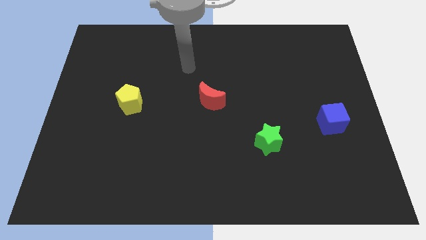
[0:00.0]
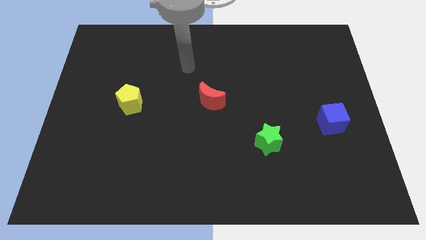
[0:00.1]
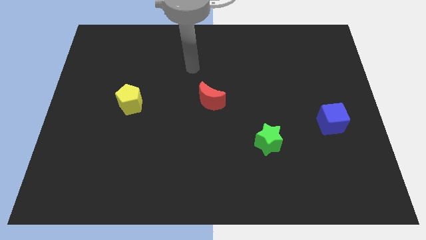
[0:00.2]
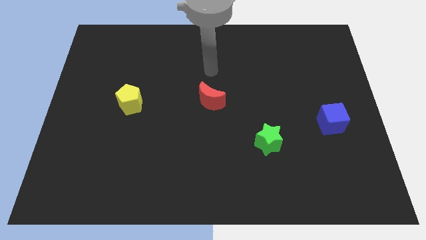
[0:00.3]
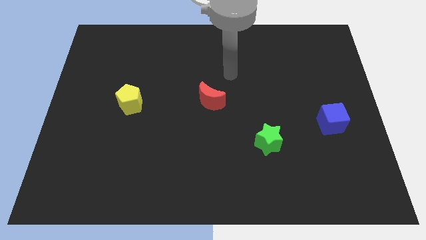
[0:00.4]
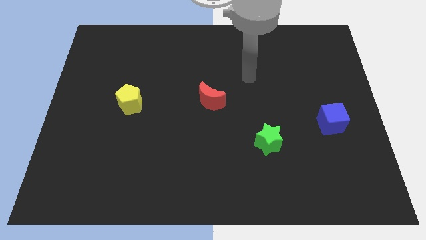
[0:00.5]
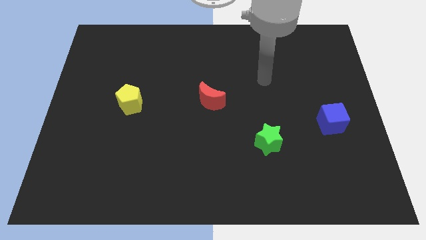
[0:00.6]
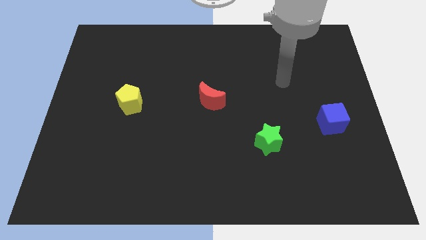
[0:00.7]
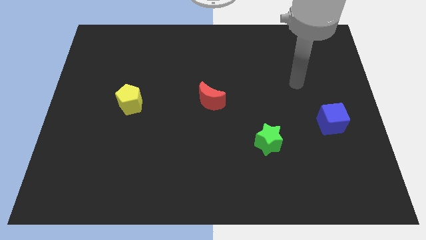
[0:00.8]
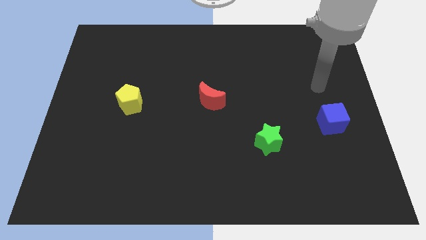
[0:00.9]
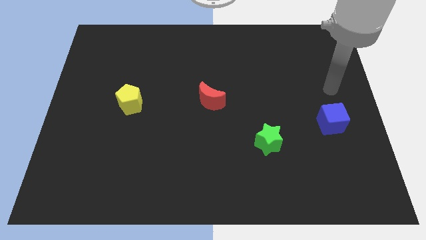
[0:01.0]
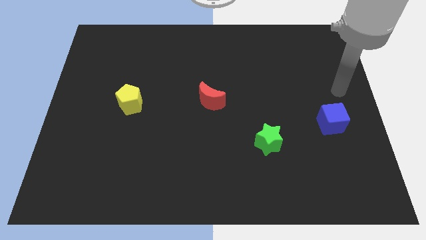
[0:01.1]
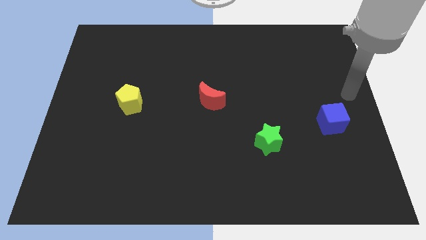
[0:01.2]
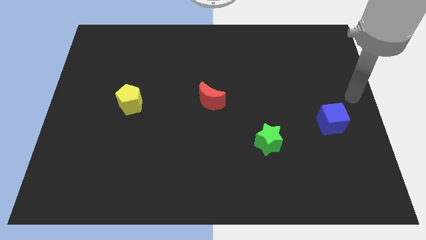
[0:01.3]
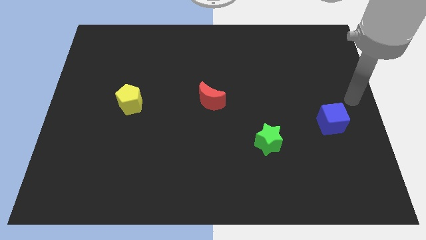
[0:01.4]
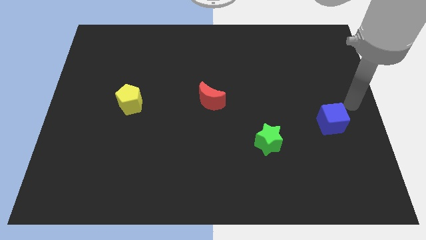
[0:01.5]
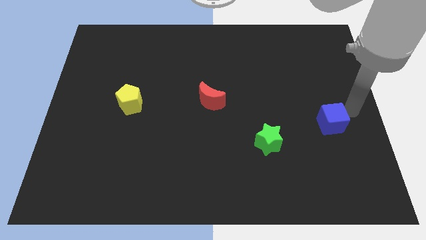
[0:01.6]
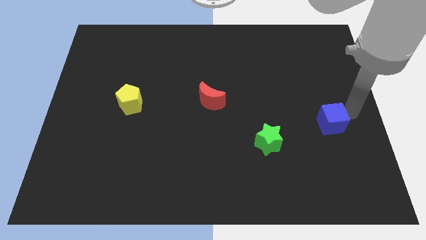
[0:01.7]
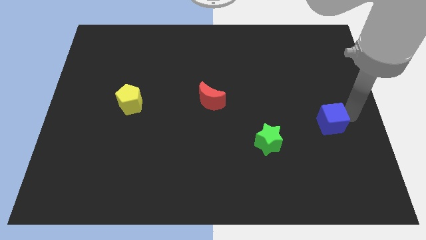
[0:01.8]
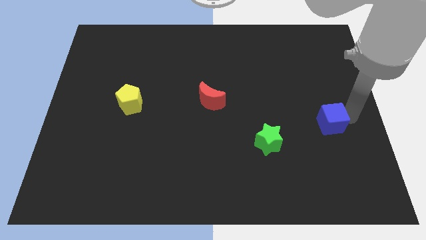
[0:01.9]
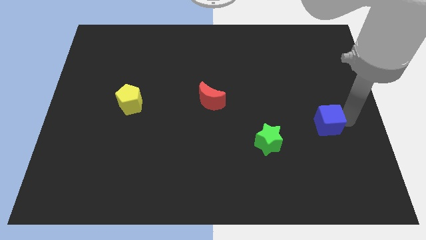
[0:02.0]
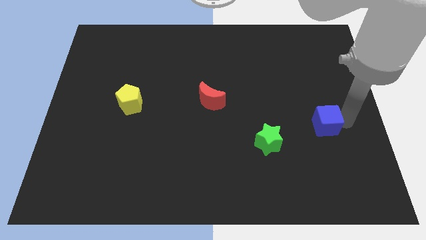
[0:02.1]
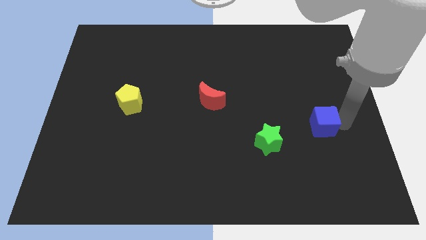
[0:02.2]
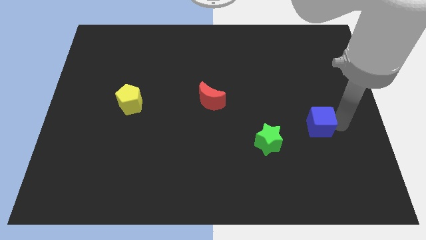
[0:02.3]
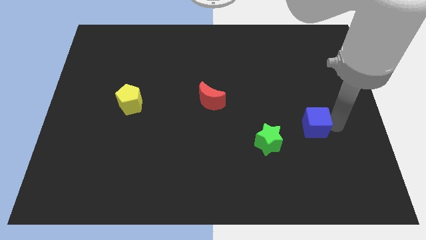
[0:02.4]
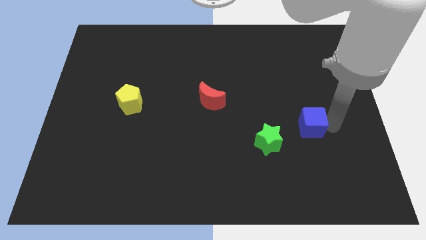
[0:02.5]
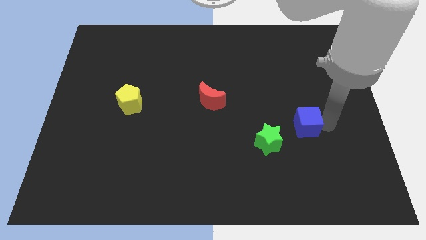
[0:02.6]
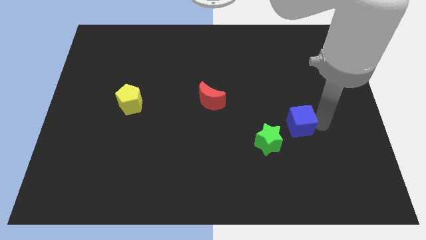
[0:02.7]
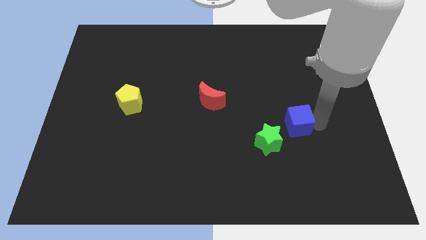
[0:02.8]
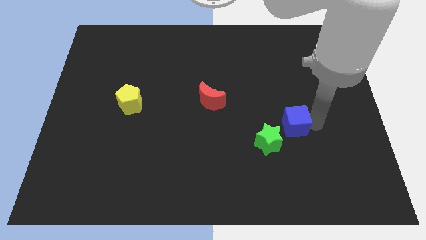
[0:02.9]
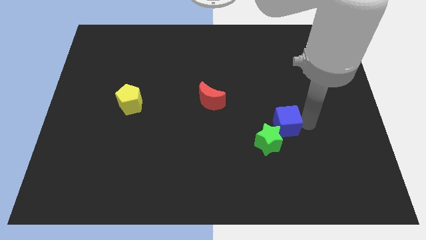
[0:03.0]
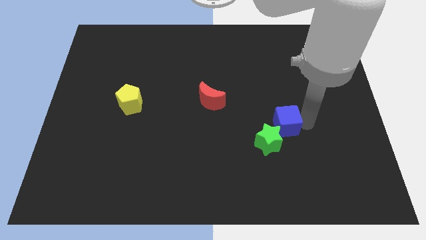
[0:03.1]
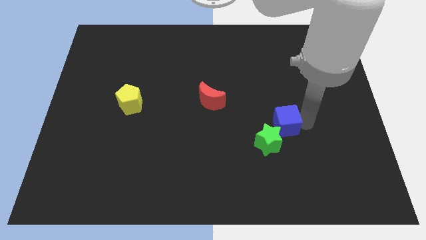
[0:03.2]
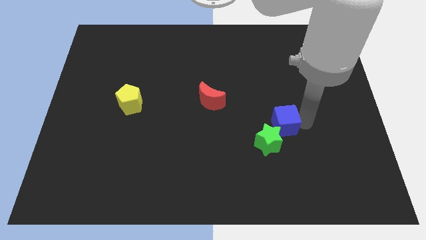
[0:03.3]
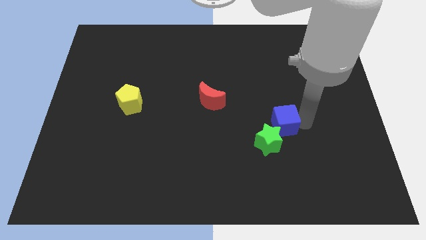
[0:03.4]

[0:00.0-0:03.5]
put the blue cube next to the green block

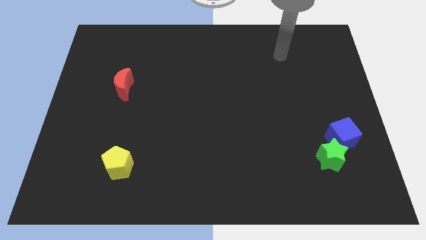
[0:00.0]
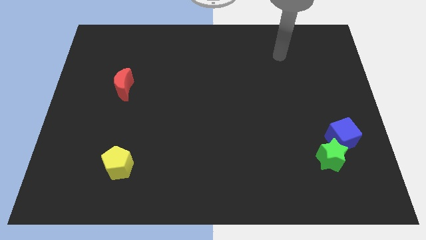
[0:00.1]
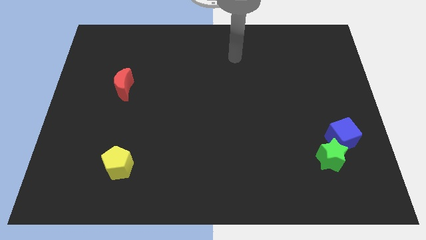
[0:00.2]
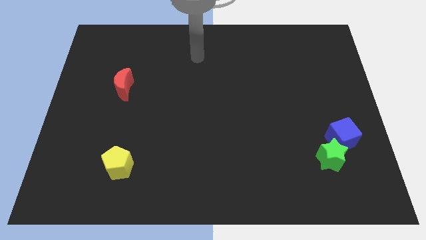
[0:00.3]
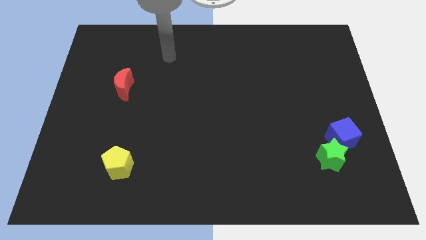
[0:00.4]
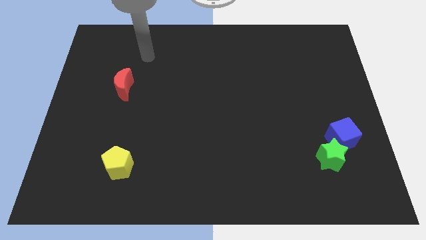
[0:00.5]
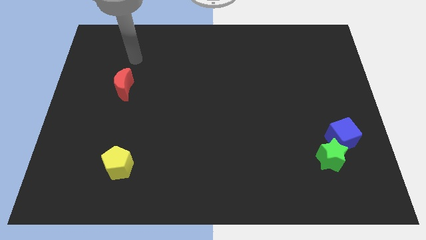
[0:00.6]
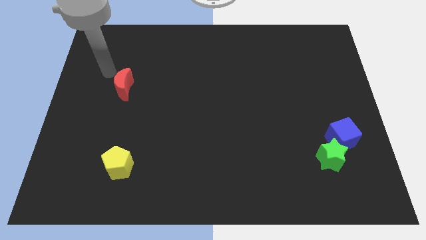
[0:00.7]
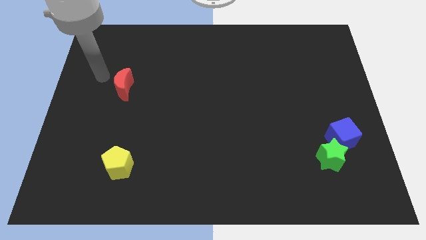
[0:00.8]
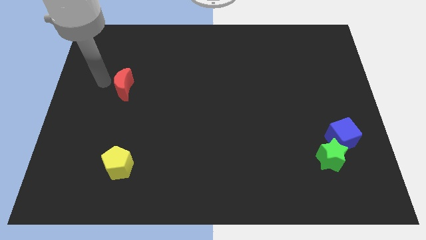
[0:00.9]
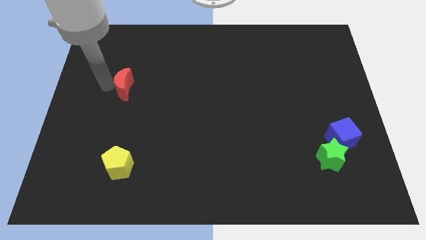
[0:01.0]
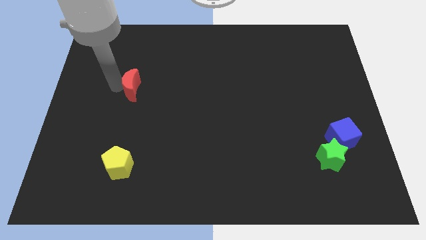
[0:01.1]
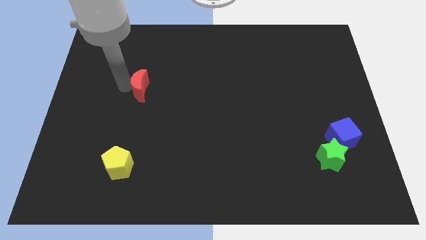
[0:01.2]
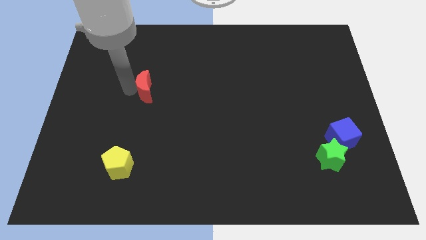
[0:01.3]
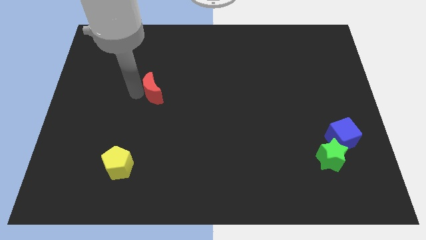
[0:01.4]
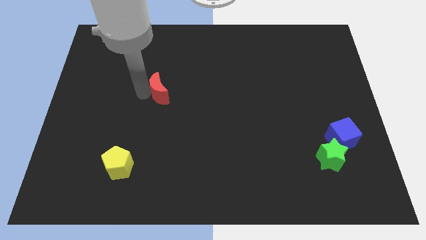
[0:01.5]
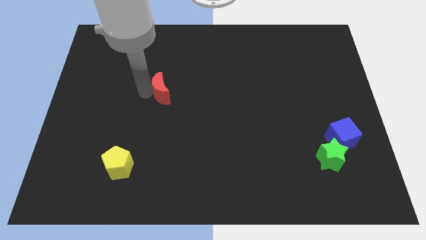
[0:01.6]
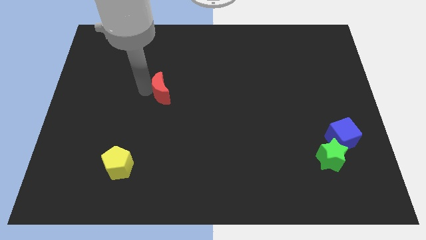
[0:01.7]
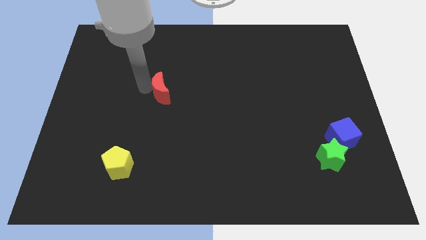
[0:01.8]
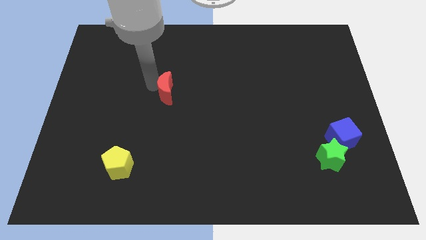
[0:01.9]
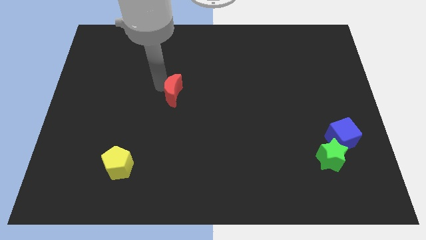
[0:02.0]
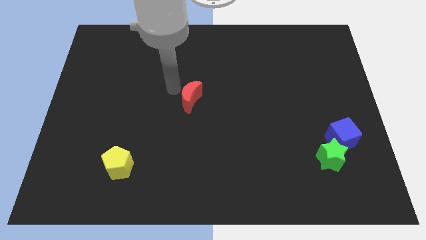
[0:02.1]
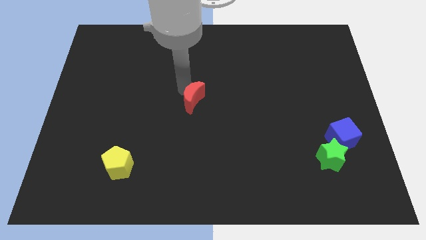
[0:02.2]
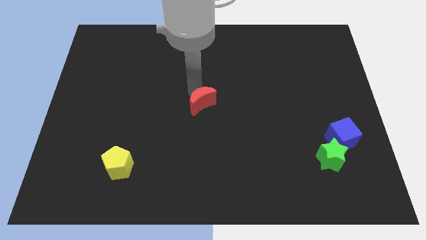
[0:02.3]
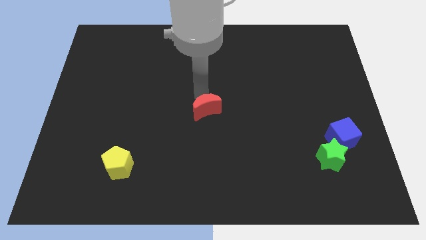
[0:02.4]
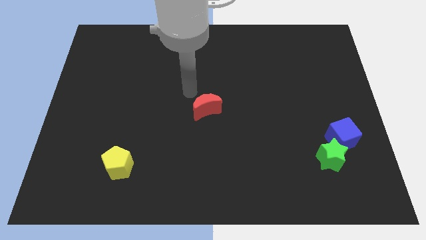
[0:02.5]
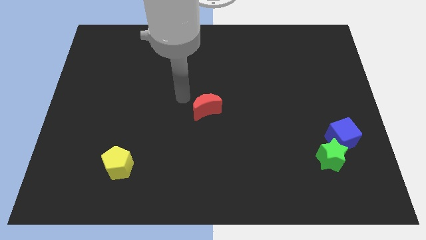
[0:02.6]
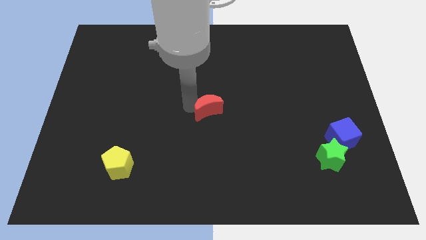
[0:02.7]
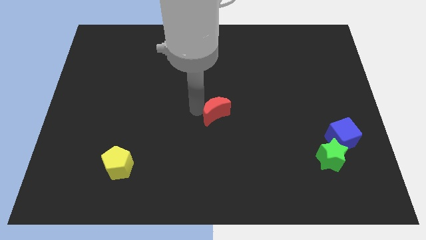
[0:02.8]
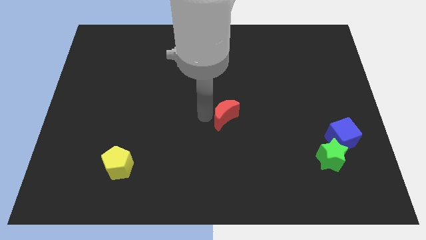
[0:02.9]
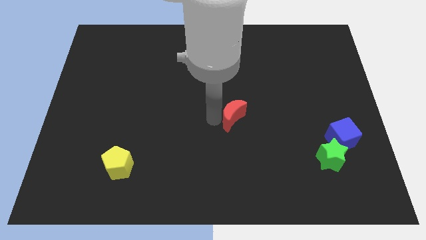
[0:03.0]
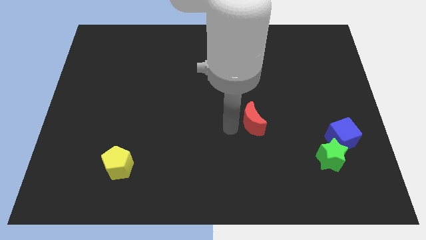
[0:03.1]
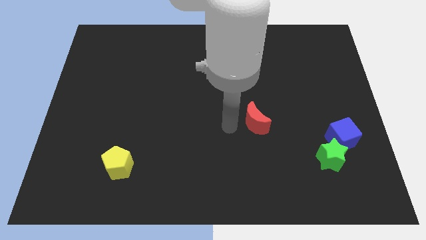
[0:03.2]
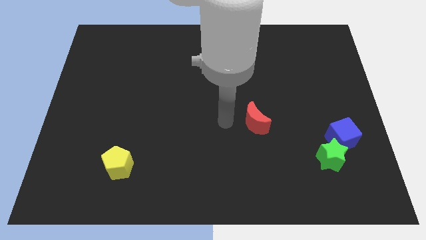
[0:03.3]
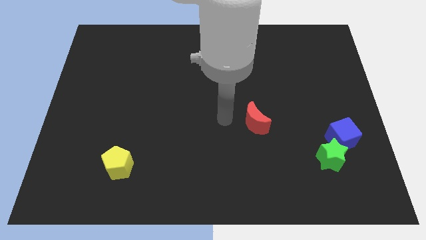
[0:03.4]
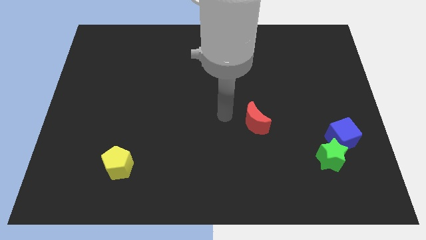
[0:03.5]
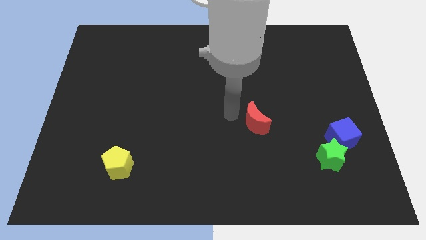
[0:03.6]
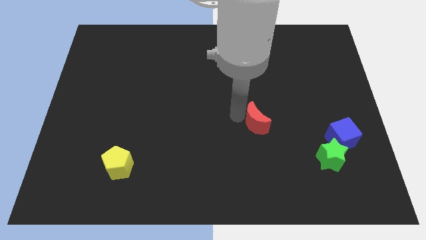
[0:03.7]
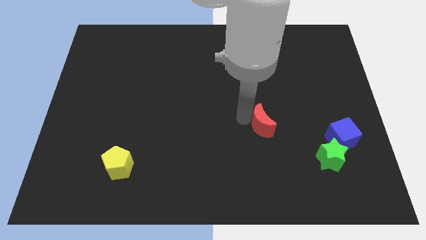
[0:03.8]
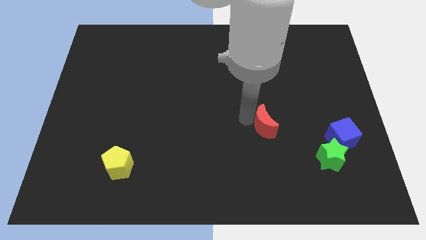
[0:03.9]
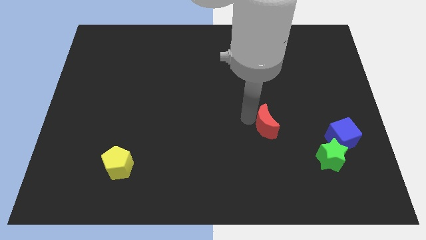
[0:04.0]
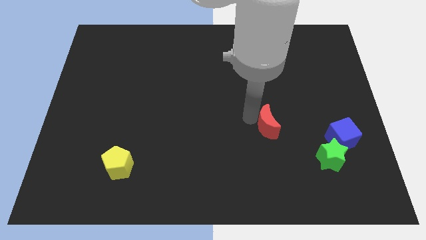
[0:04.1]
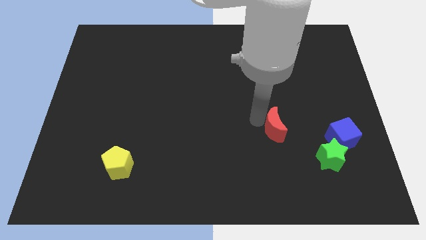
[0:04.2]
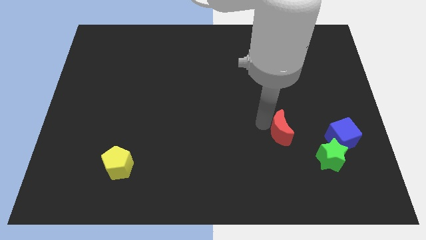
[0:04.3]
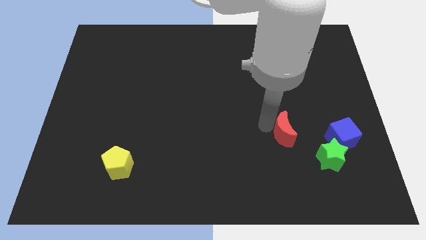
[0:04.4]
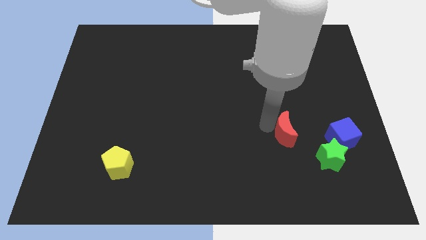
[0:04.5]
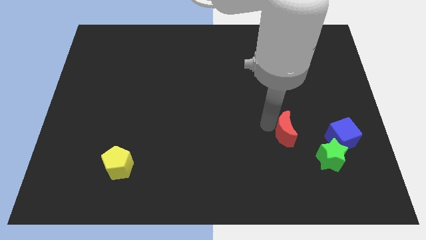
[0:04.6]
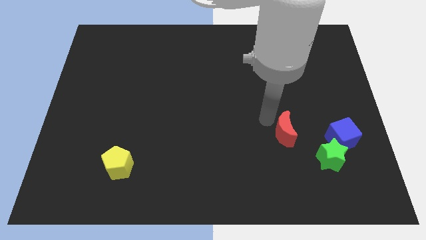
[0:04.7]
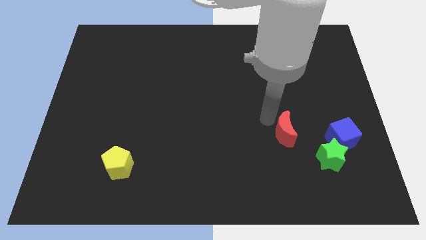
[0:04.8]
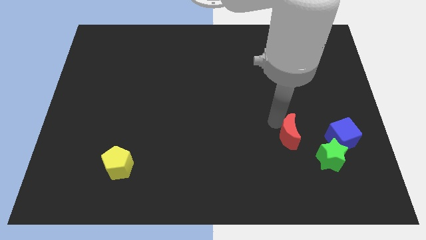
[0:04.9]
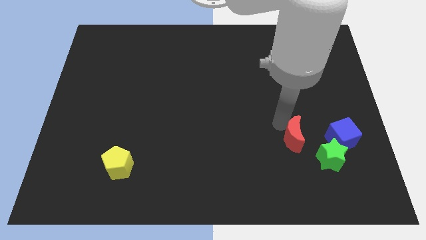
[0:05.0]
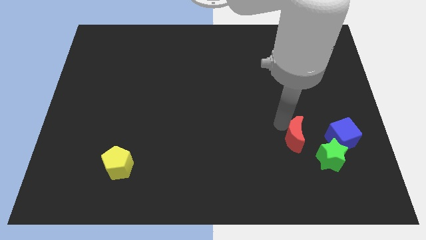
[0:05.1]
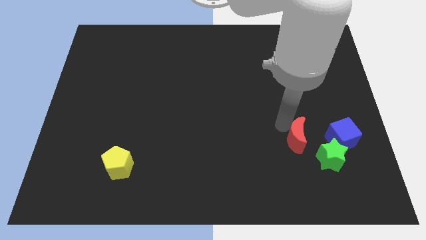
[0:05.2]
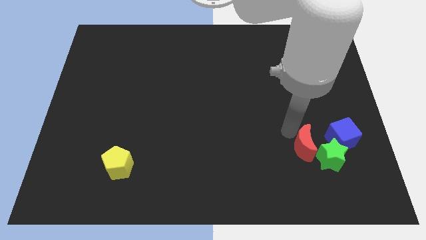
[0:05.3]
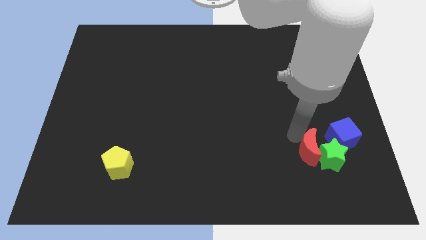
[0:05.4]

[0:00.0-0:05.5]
put the red block towards the green block
